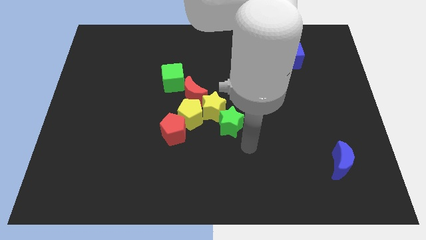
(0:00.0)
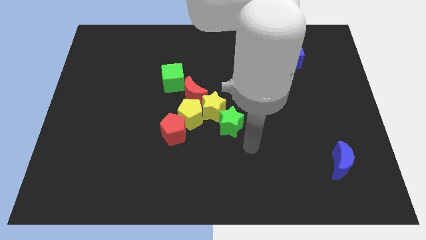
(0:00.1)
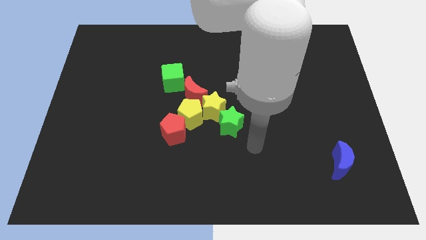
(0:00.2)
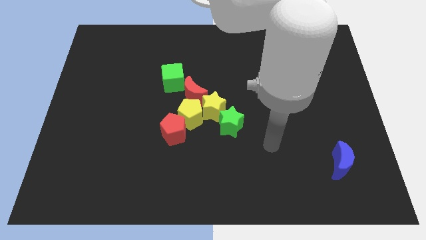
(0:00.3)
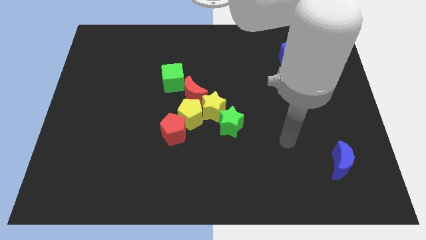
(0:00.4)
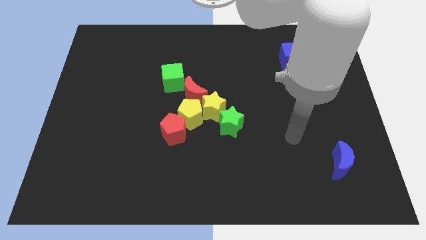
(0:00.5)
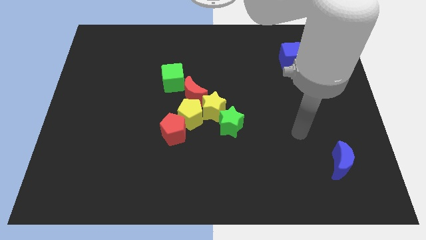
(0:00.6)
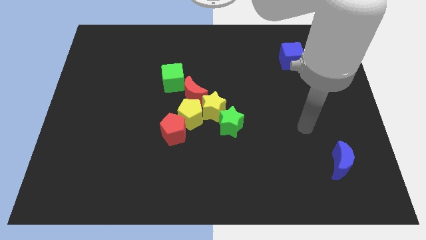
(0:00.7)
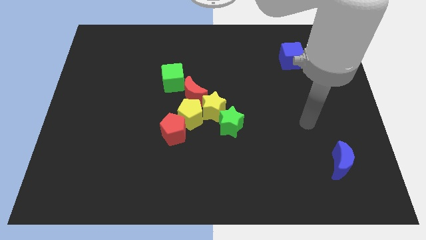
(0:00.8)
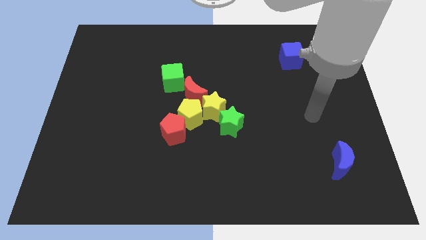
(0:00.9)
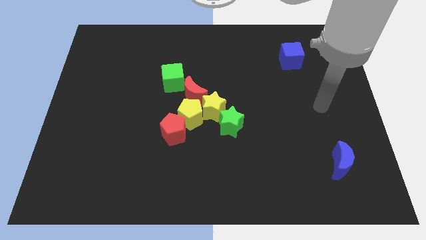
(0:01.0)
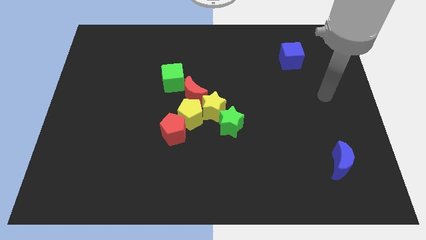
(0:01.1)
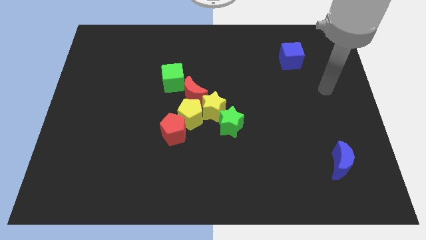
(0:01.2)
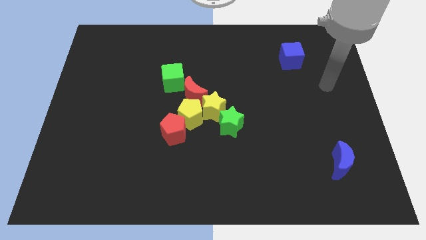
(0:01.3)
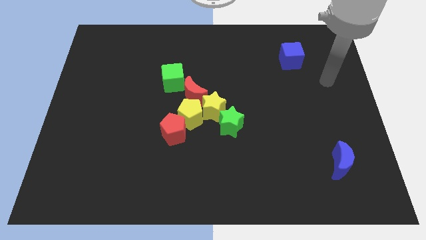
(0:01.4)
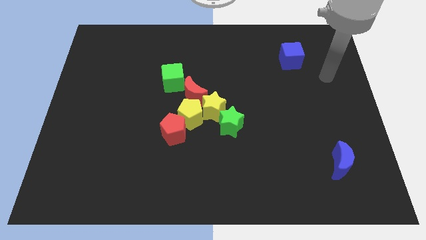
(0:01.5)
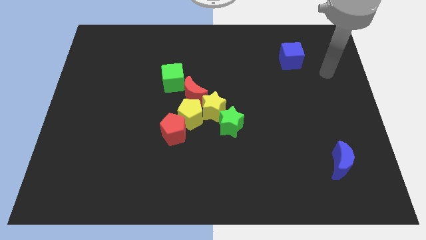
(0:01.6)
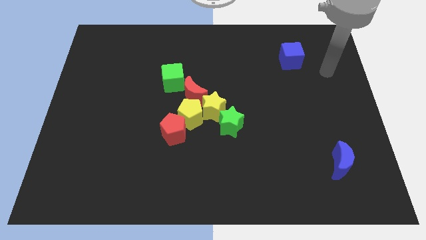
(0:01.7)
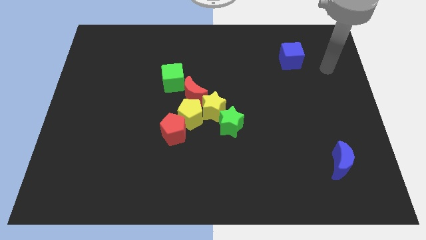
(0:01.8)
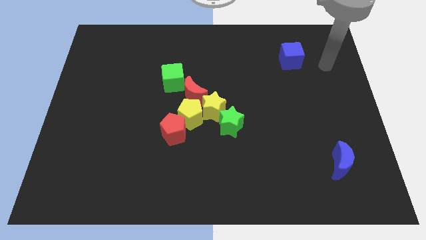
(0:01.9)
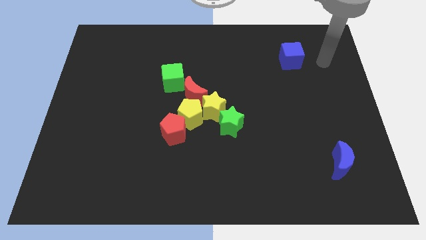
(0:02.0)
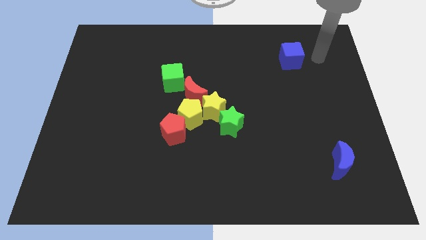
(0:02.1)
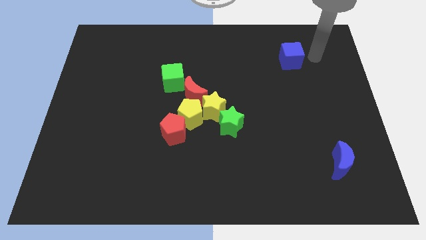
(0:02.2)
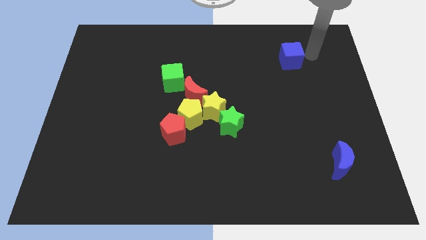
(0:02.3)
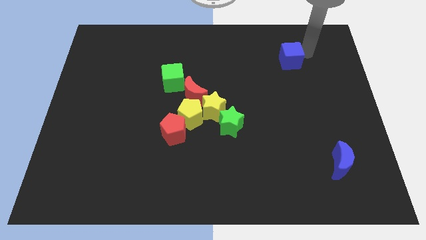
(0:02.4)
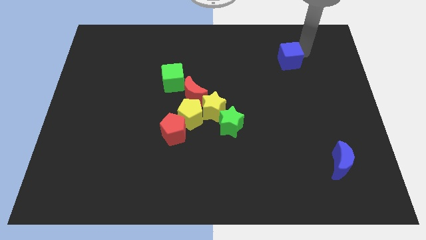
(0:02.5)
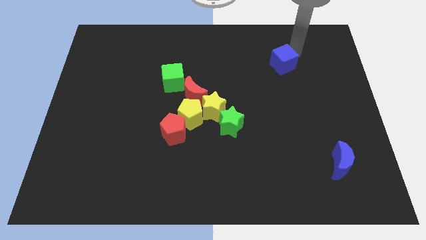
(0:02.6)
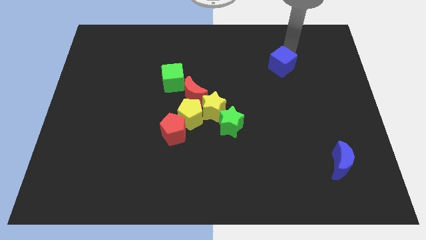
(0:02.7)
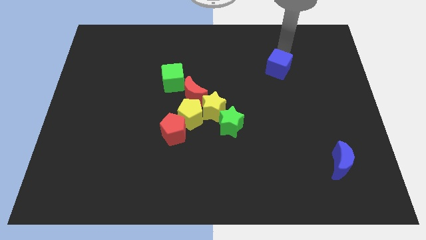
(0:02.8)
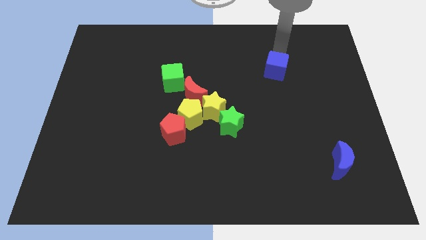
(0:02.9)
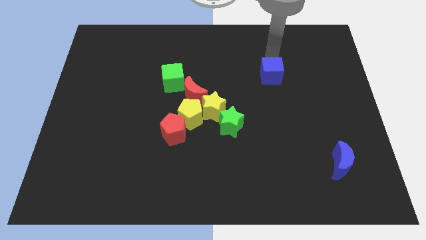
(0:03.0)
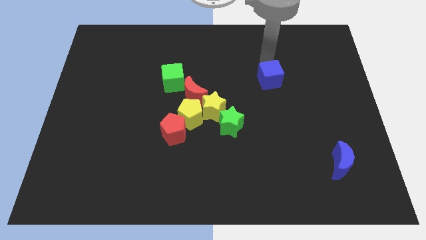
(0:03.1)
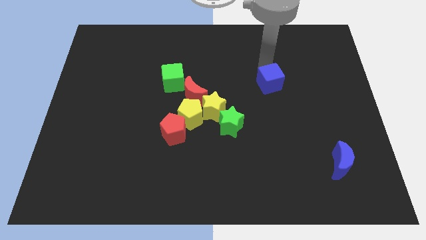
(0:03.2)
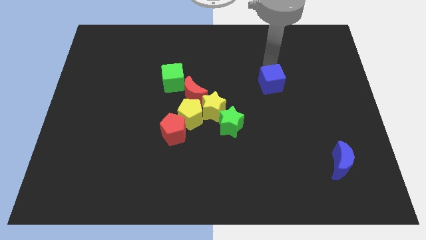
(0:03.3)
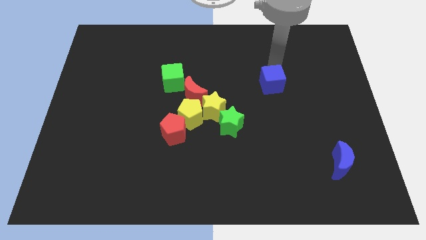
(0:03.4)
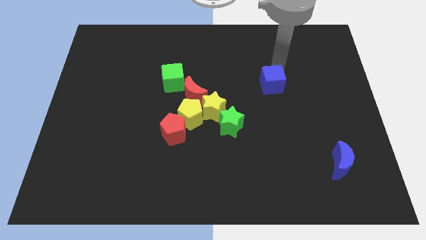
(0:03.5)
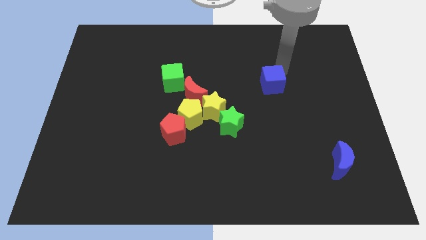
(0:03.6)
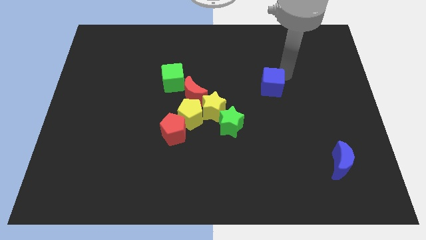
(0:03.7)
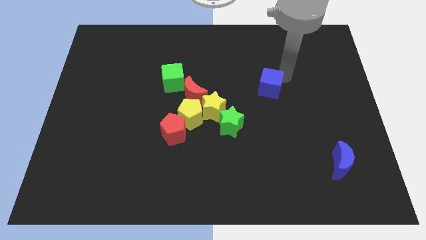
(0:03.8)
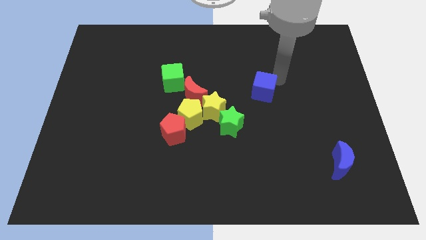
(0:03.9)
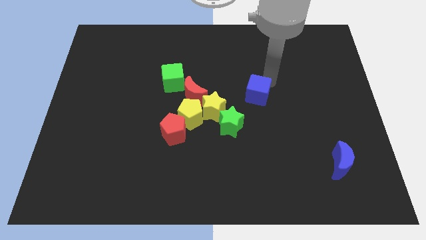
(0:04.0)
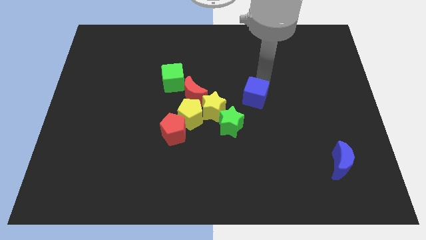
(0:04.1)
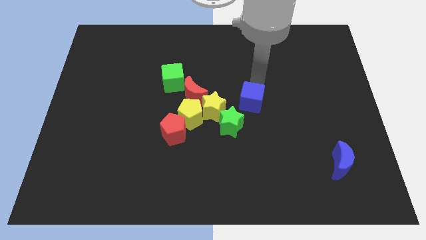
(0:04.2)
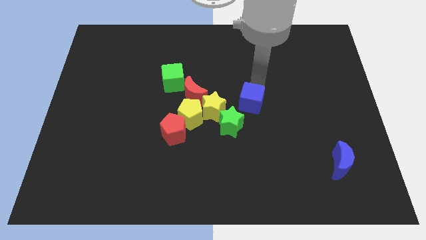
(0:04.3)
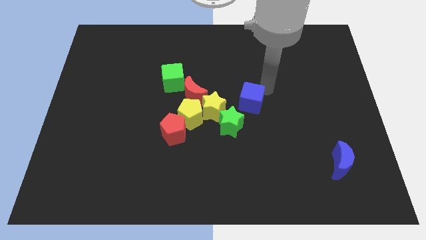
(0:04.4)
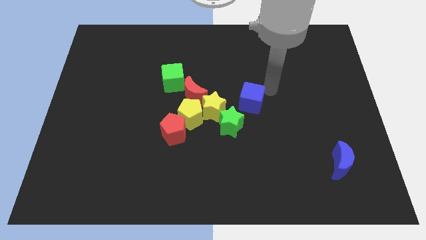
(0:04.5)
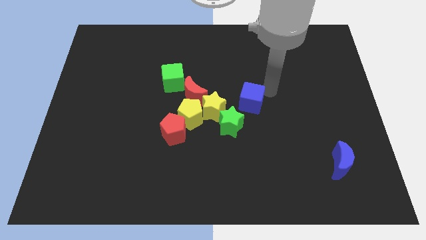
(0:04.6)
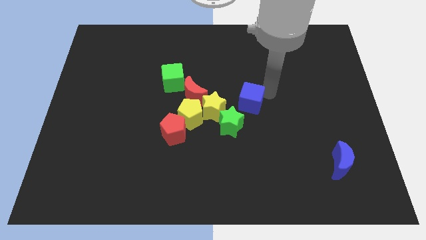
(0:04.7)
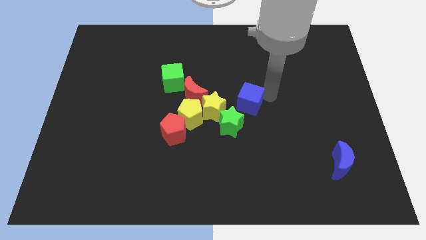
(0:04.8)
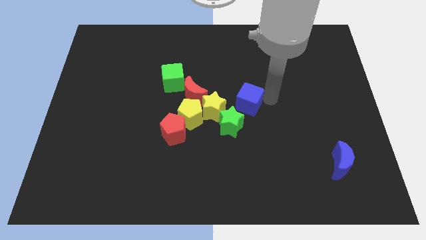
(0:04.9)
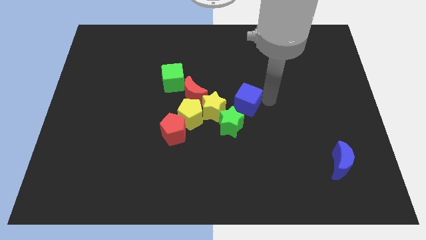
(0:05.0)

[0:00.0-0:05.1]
move the blue cube closer to the green star

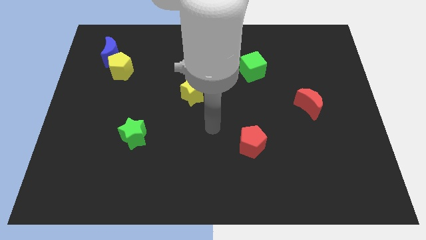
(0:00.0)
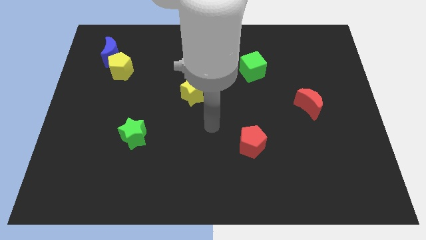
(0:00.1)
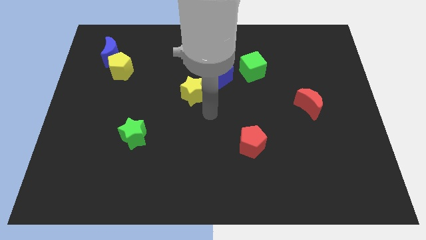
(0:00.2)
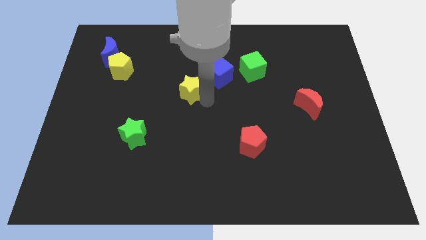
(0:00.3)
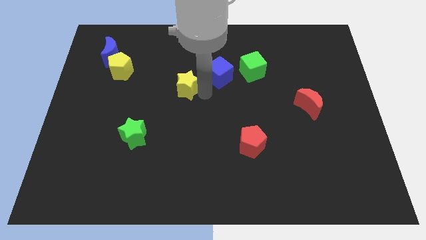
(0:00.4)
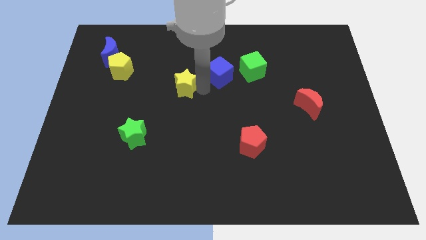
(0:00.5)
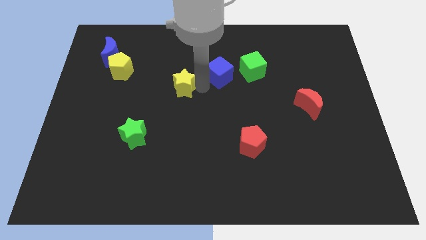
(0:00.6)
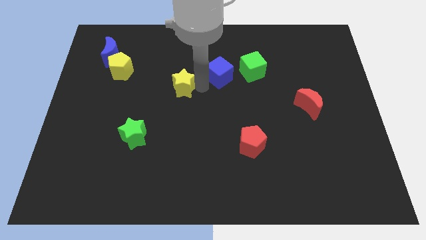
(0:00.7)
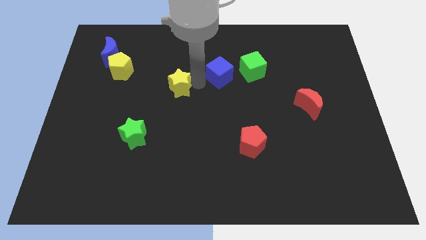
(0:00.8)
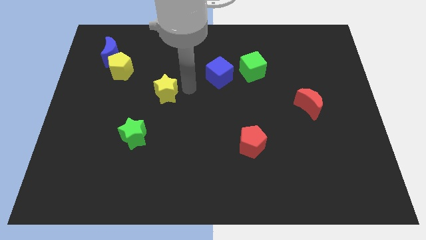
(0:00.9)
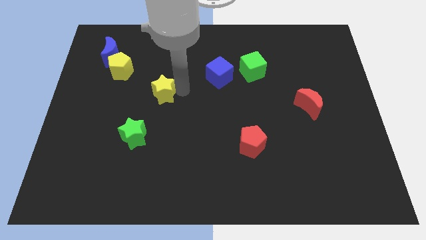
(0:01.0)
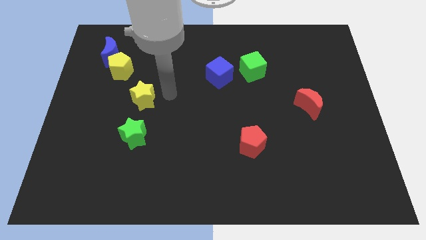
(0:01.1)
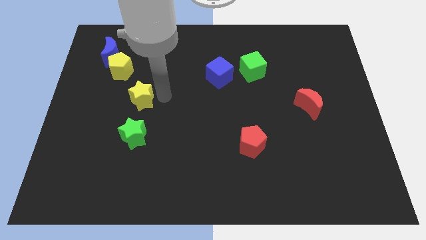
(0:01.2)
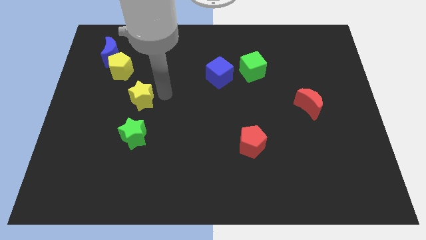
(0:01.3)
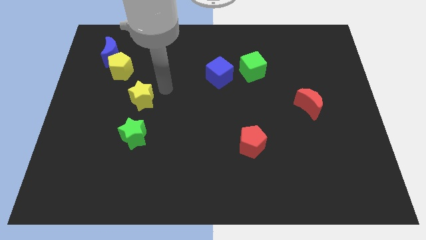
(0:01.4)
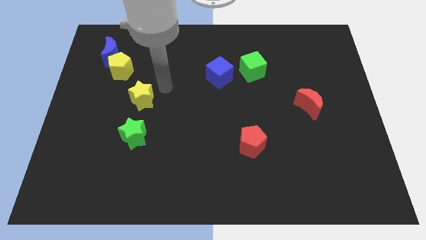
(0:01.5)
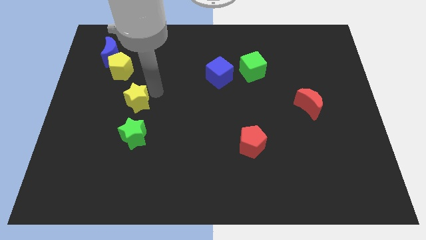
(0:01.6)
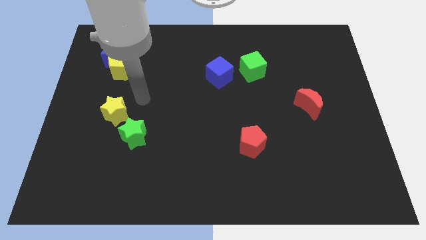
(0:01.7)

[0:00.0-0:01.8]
push the yellow star to the top of the green star

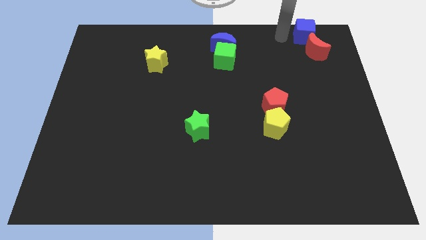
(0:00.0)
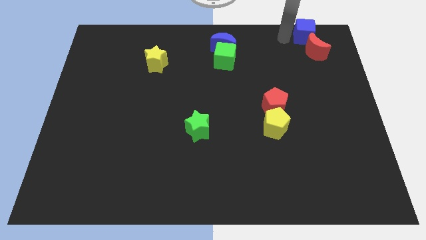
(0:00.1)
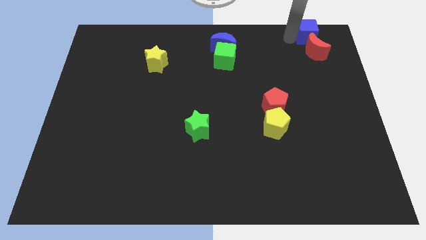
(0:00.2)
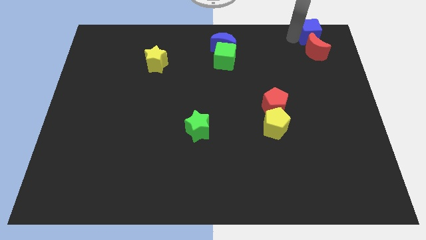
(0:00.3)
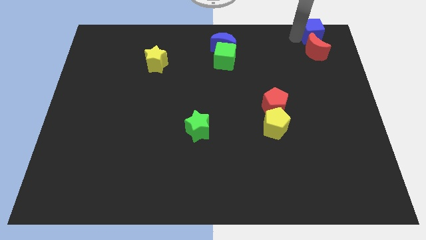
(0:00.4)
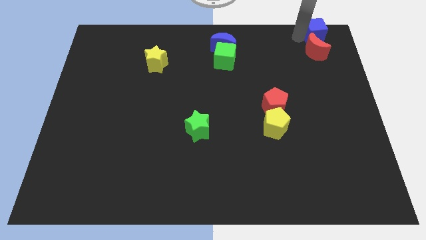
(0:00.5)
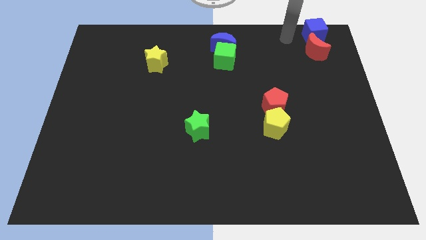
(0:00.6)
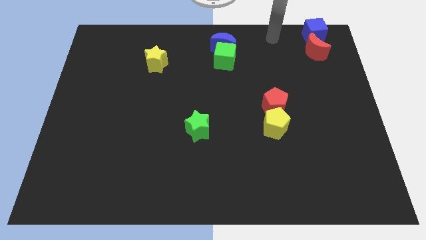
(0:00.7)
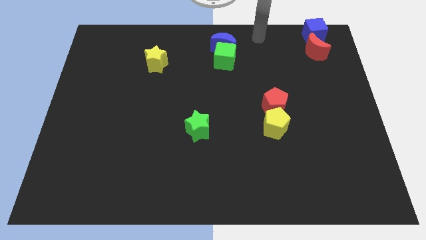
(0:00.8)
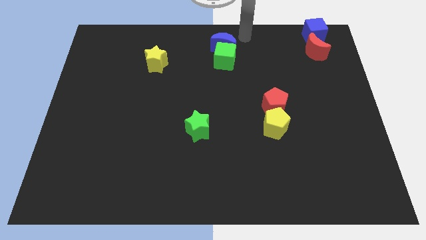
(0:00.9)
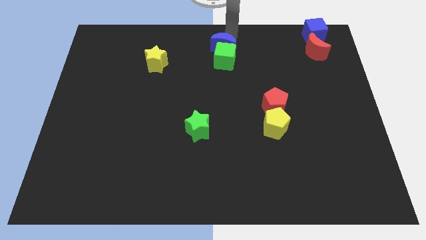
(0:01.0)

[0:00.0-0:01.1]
slide blue cube on top of red moon

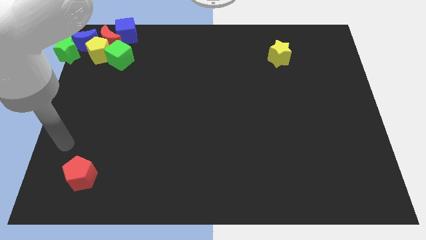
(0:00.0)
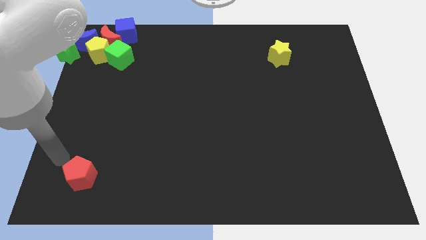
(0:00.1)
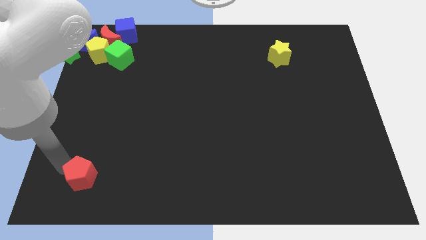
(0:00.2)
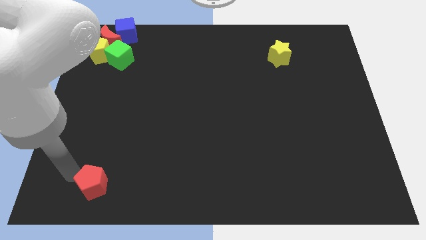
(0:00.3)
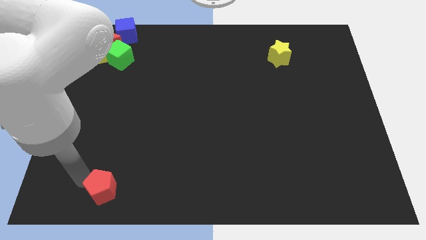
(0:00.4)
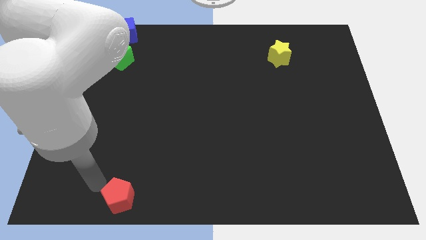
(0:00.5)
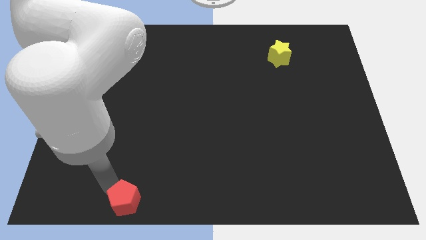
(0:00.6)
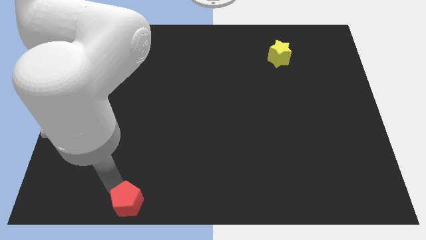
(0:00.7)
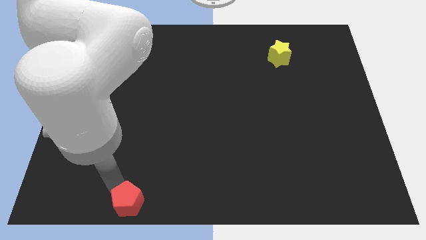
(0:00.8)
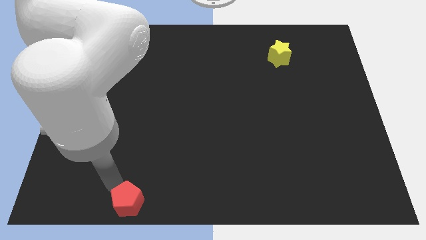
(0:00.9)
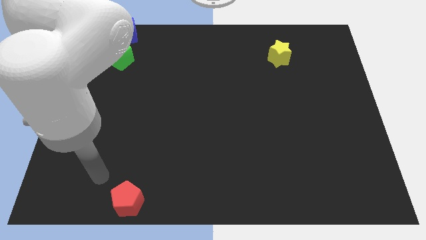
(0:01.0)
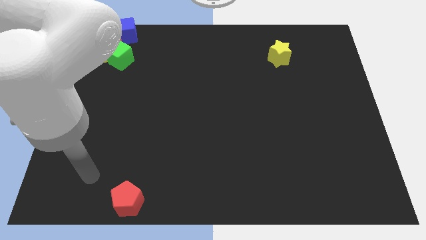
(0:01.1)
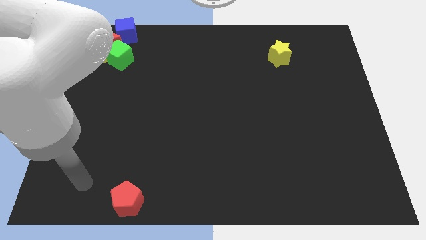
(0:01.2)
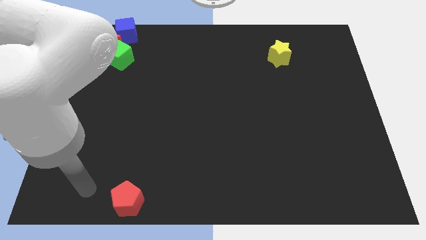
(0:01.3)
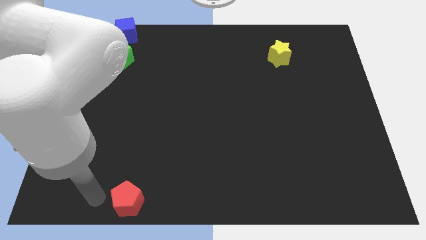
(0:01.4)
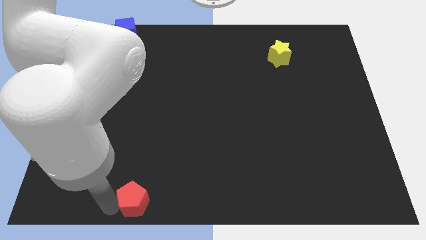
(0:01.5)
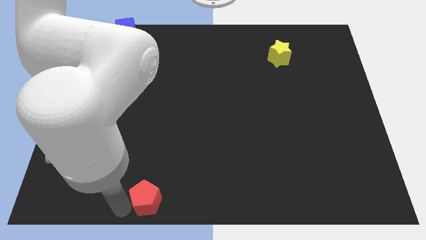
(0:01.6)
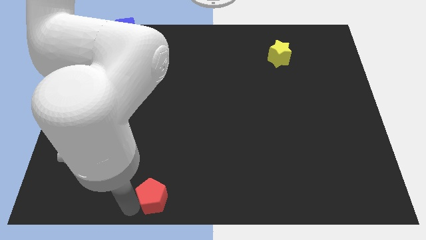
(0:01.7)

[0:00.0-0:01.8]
push the red pentagon towards the bottom of the board
